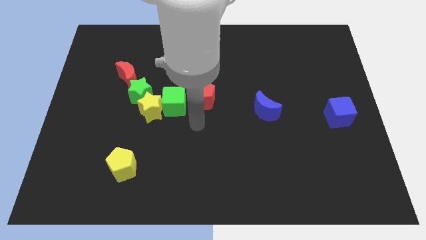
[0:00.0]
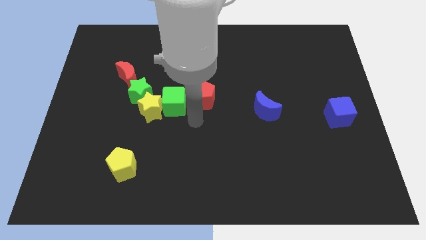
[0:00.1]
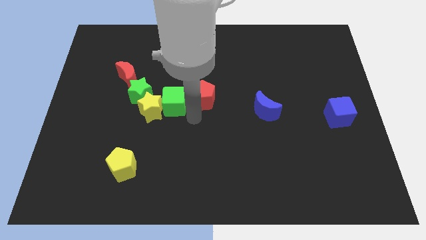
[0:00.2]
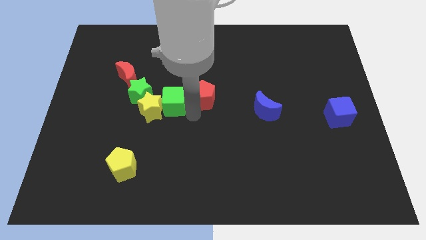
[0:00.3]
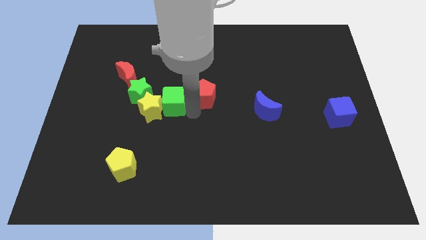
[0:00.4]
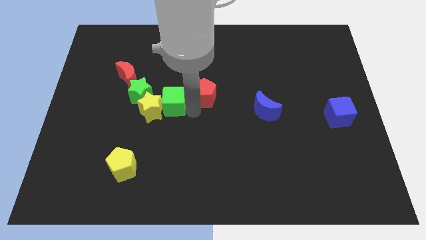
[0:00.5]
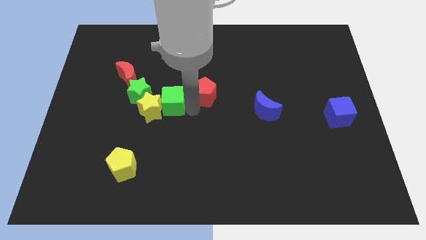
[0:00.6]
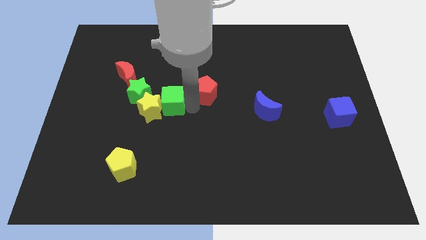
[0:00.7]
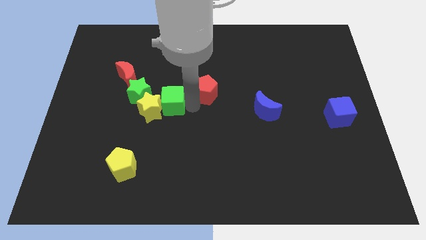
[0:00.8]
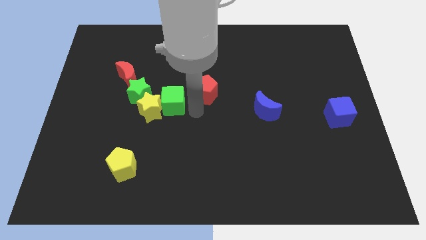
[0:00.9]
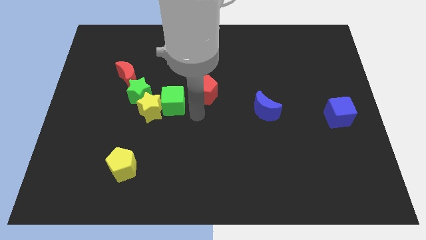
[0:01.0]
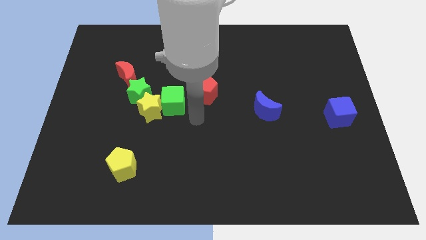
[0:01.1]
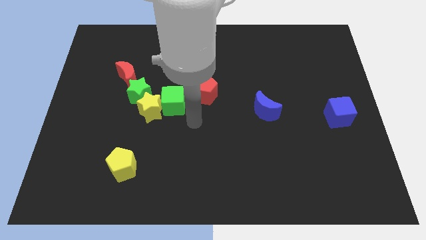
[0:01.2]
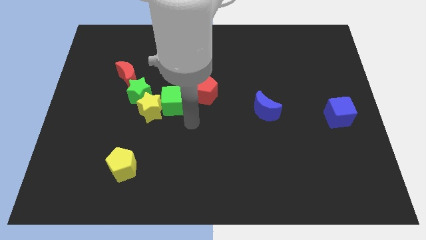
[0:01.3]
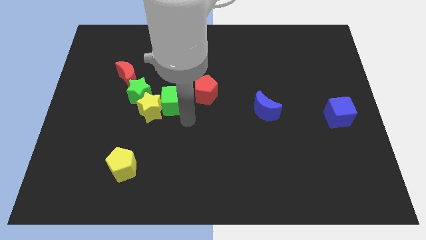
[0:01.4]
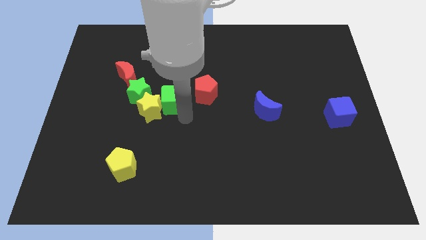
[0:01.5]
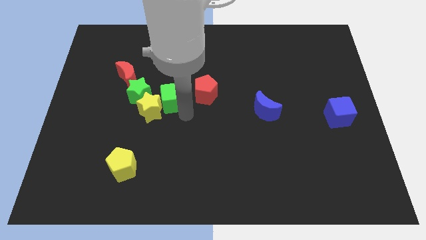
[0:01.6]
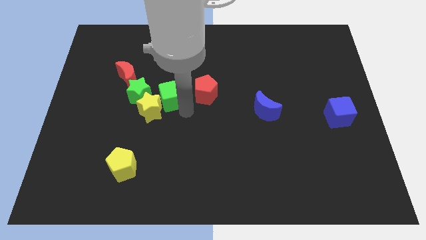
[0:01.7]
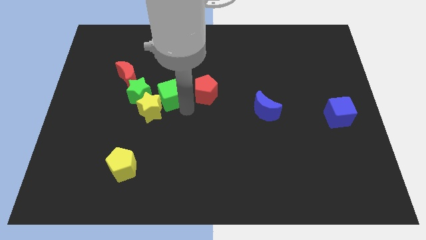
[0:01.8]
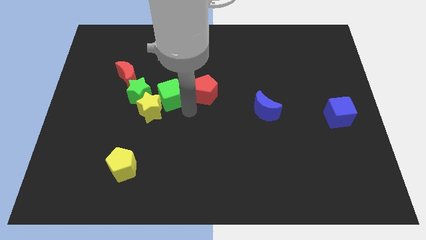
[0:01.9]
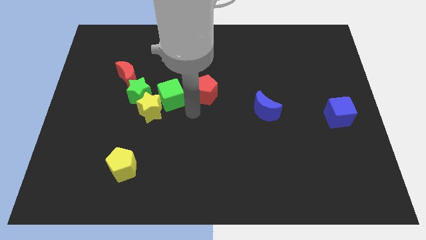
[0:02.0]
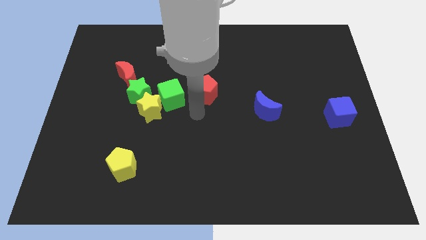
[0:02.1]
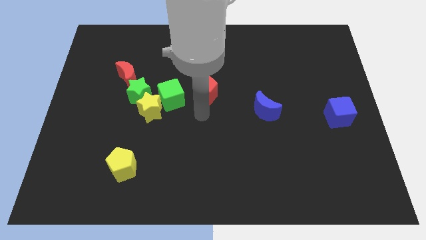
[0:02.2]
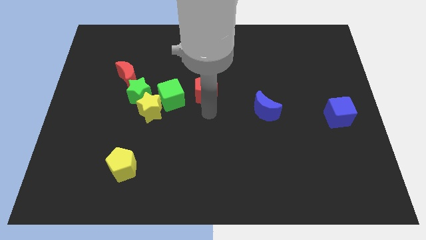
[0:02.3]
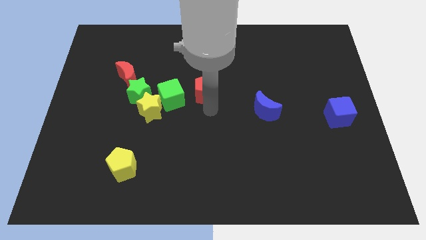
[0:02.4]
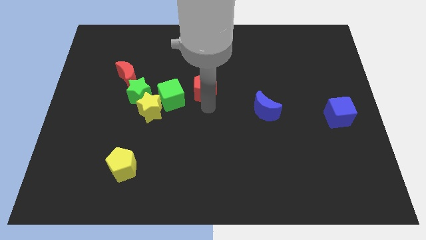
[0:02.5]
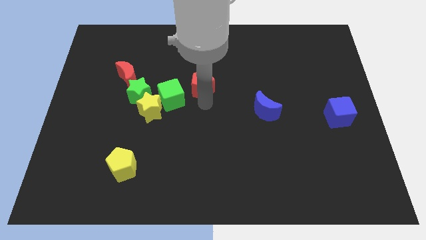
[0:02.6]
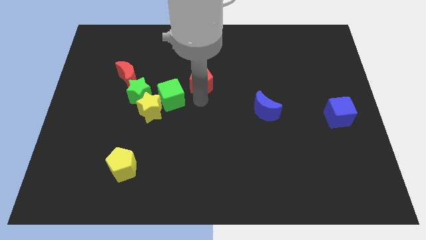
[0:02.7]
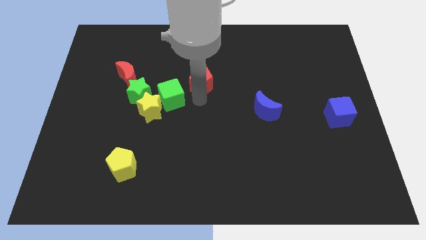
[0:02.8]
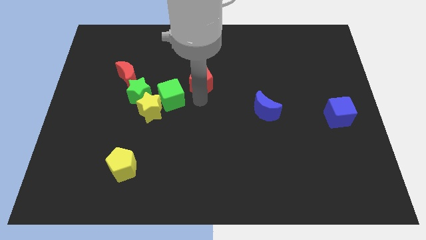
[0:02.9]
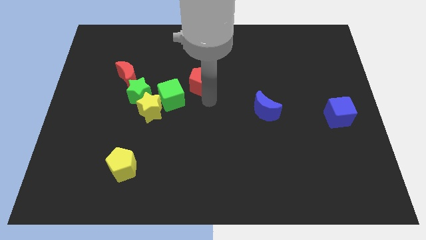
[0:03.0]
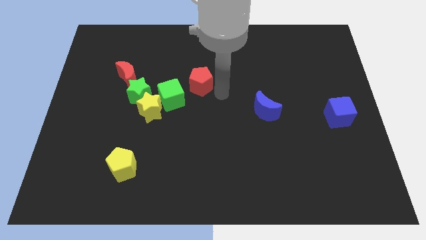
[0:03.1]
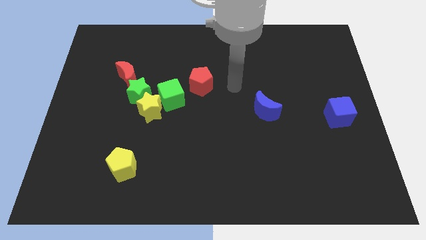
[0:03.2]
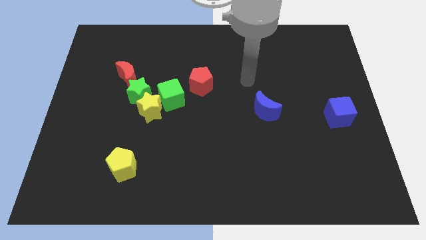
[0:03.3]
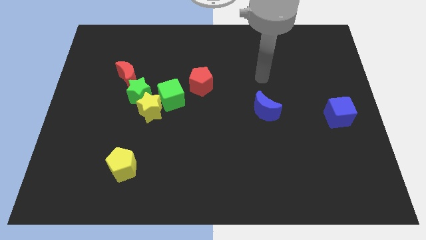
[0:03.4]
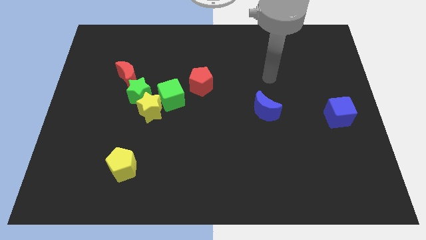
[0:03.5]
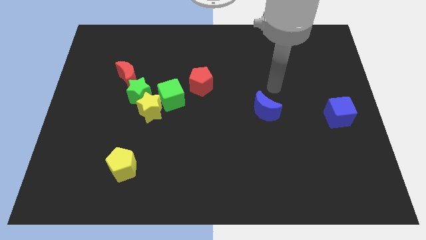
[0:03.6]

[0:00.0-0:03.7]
move the arm to the blue moon

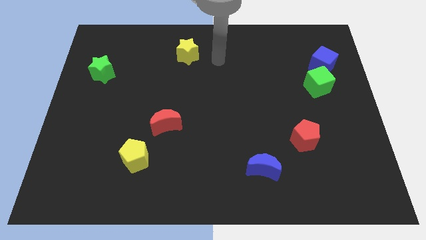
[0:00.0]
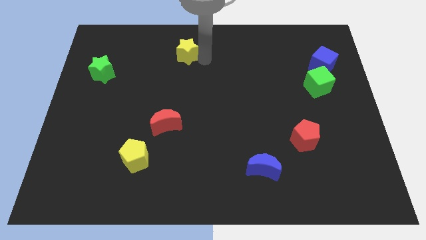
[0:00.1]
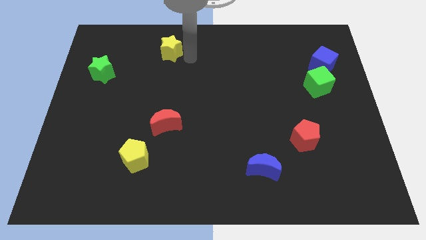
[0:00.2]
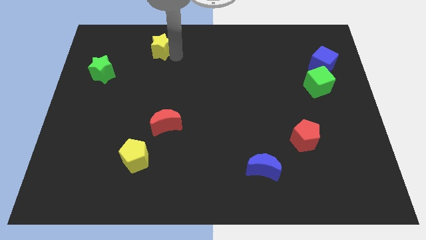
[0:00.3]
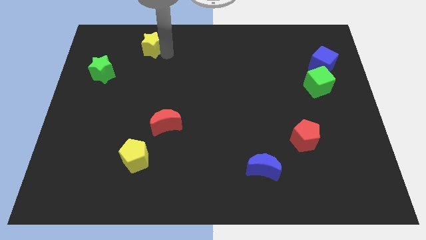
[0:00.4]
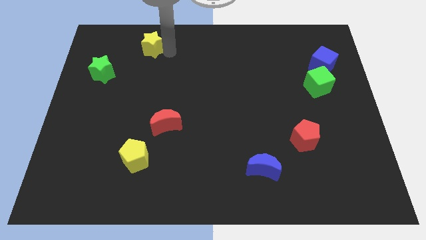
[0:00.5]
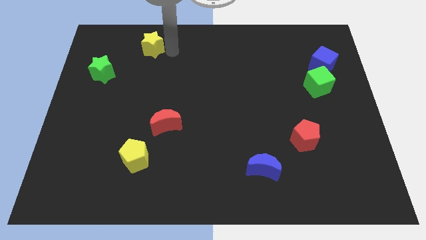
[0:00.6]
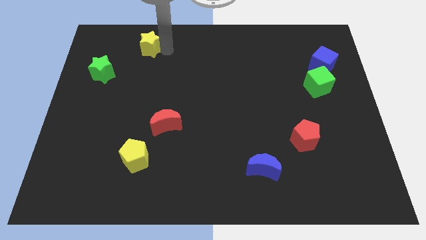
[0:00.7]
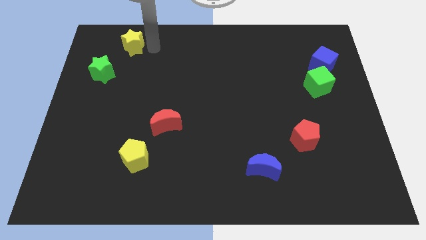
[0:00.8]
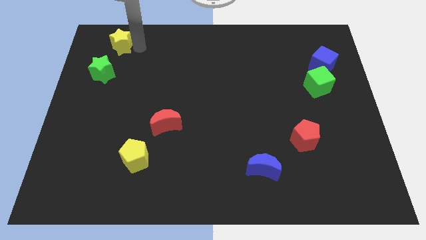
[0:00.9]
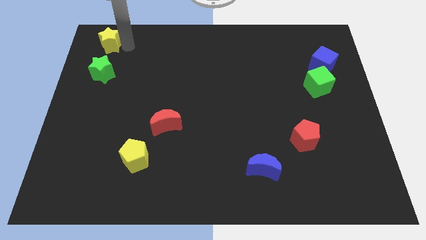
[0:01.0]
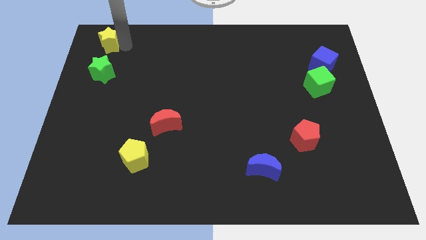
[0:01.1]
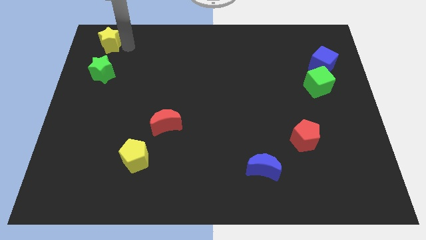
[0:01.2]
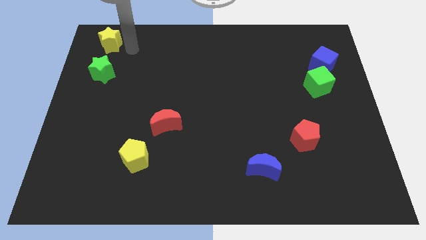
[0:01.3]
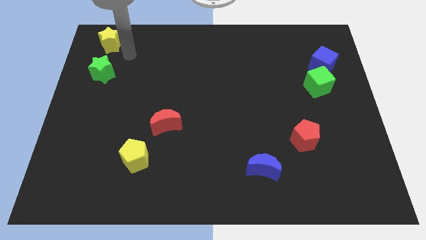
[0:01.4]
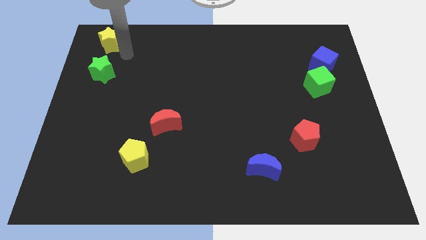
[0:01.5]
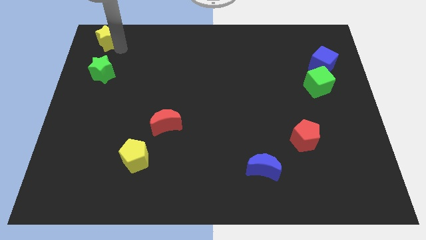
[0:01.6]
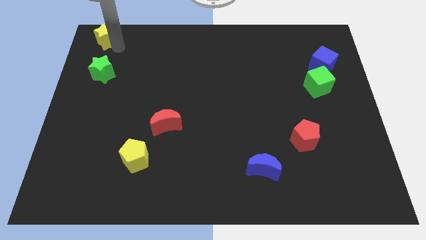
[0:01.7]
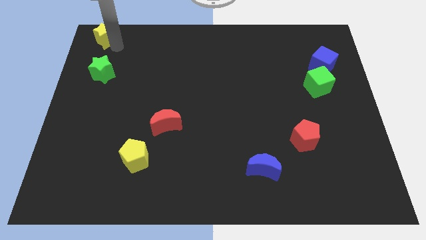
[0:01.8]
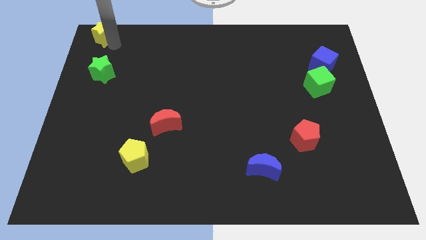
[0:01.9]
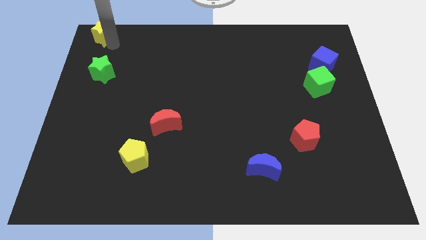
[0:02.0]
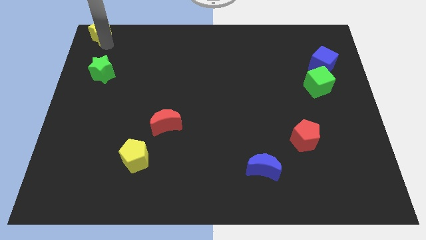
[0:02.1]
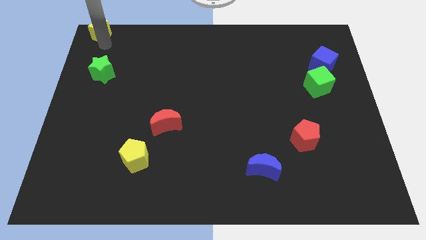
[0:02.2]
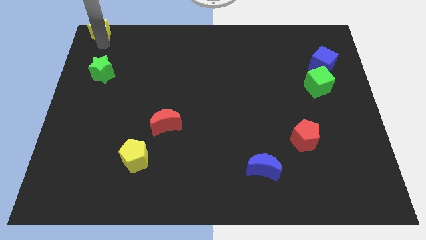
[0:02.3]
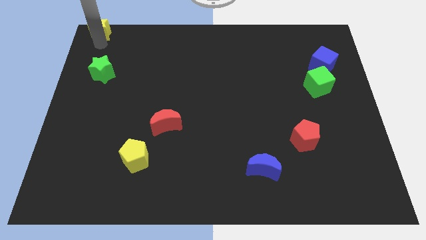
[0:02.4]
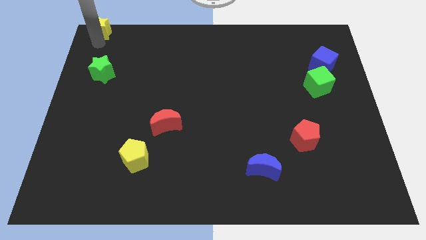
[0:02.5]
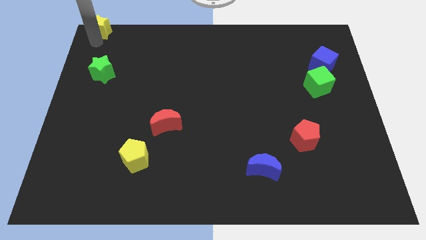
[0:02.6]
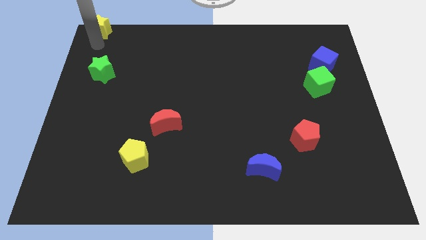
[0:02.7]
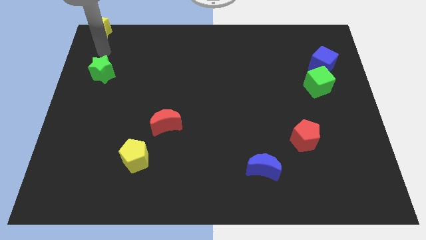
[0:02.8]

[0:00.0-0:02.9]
push the yellow star to the top left corner

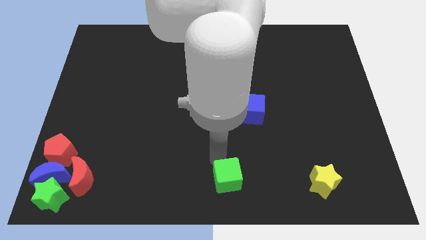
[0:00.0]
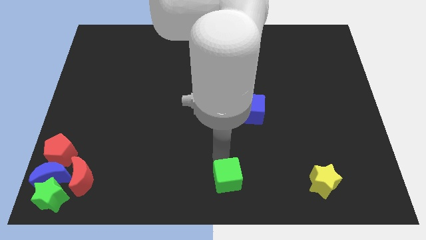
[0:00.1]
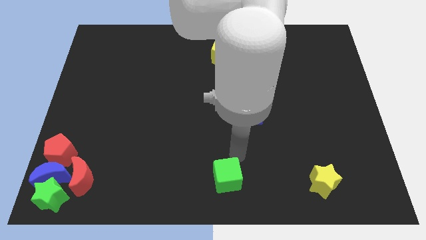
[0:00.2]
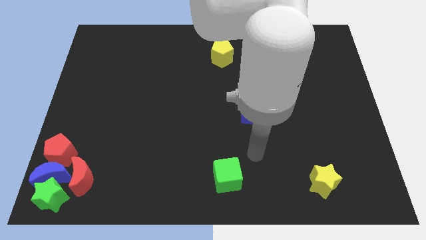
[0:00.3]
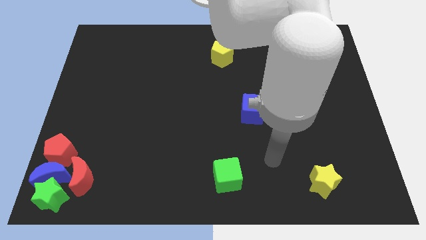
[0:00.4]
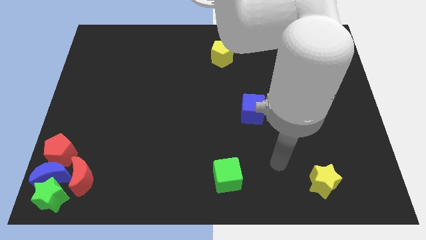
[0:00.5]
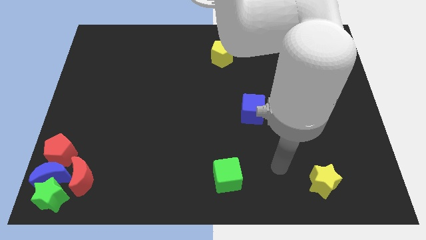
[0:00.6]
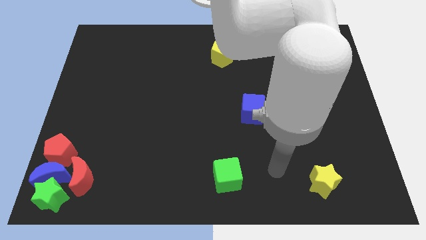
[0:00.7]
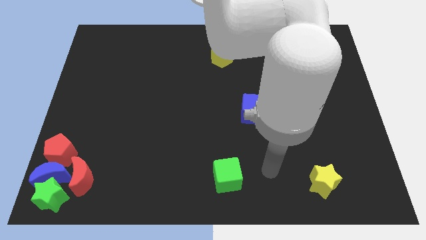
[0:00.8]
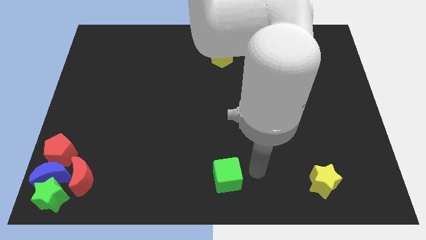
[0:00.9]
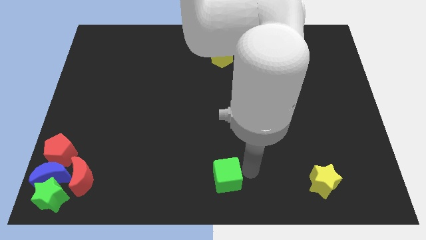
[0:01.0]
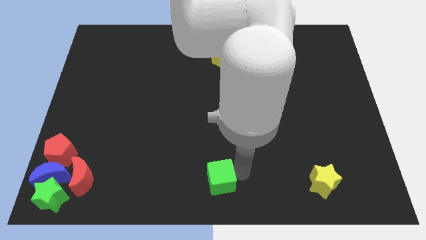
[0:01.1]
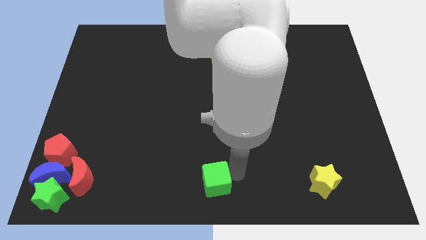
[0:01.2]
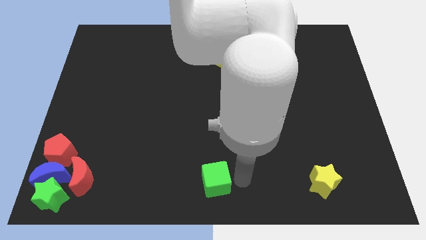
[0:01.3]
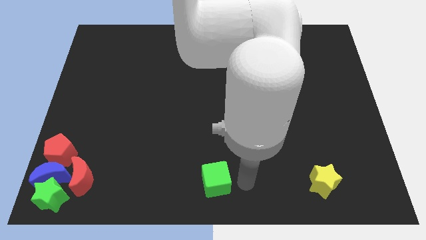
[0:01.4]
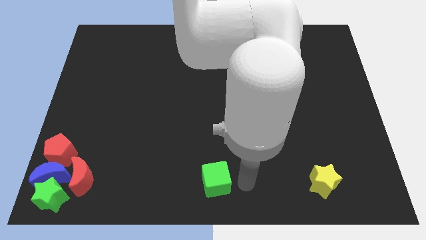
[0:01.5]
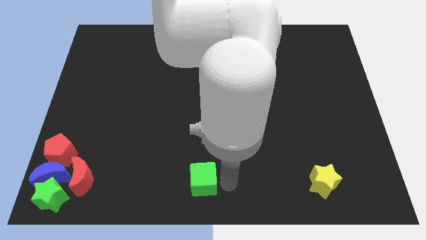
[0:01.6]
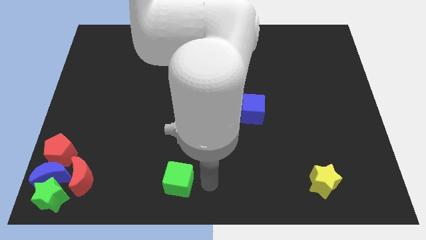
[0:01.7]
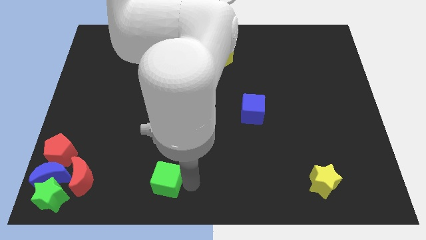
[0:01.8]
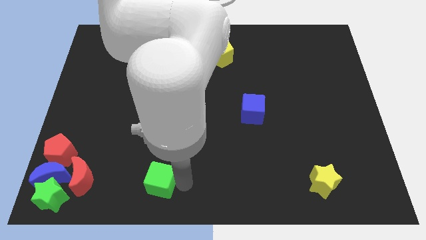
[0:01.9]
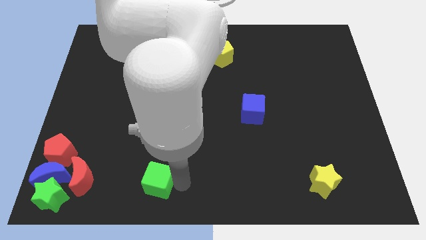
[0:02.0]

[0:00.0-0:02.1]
drag the green cube towards the red moon

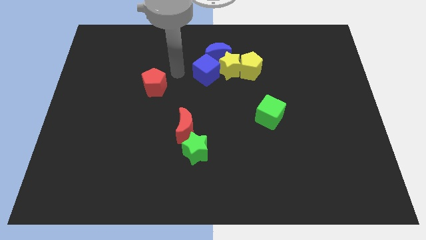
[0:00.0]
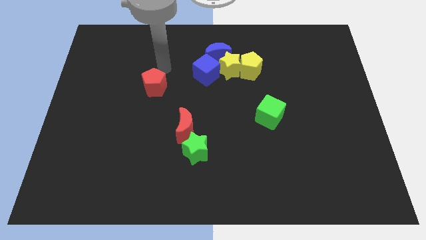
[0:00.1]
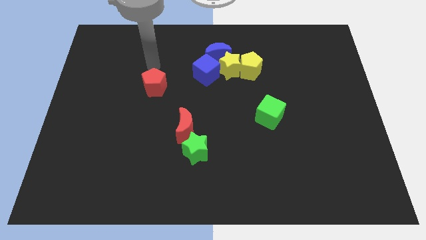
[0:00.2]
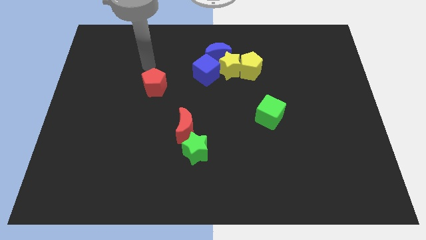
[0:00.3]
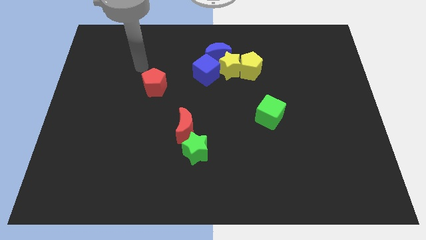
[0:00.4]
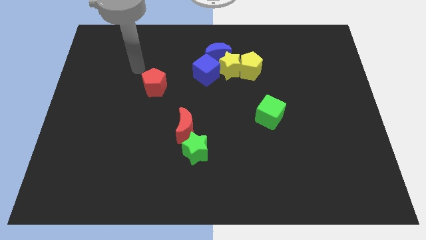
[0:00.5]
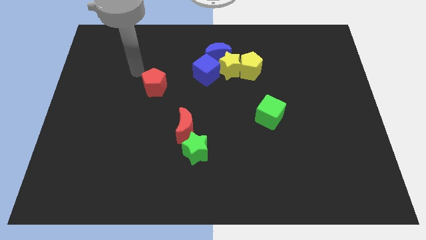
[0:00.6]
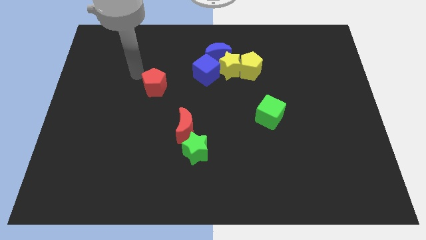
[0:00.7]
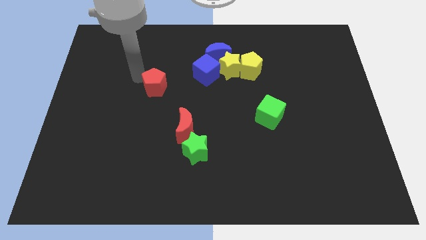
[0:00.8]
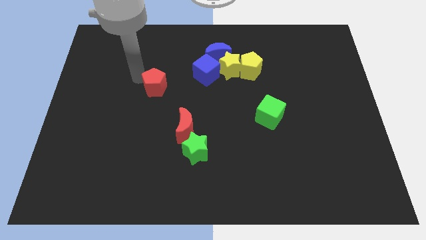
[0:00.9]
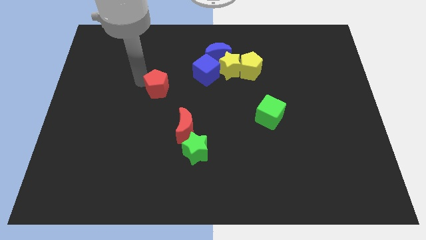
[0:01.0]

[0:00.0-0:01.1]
tap the red pentagon
